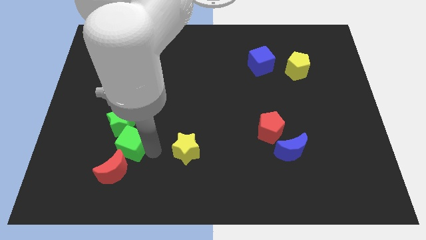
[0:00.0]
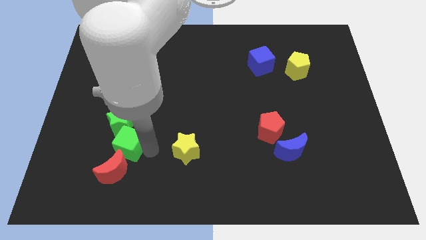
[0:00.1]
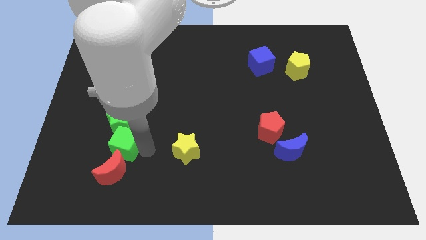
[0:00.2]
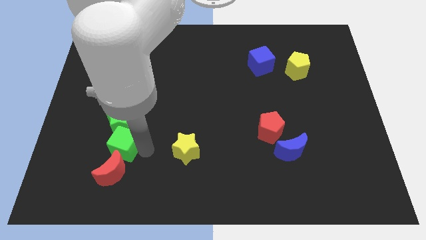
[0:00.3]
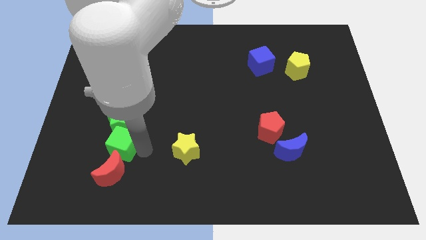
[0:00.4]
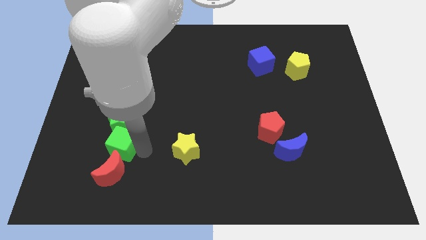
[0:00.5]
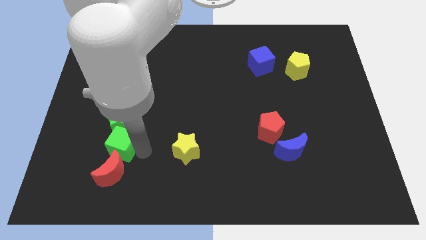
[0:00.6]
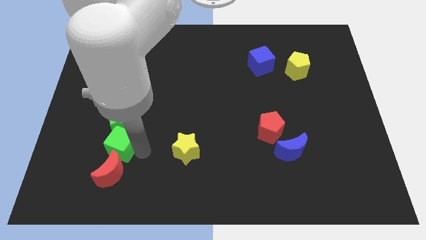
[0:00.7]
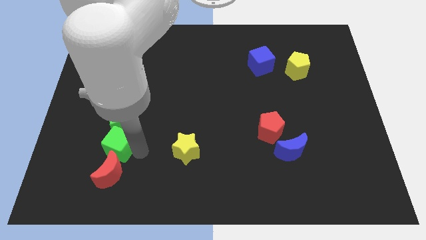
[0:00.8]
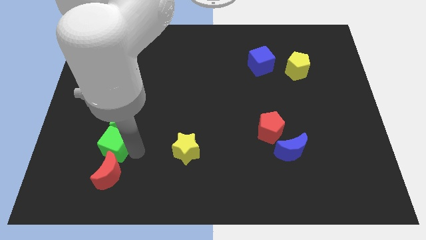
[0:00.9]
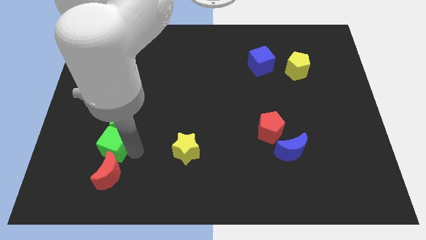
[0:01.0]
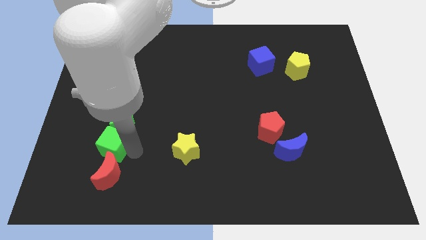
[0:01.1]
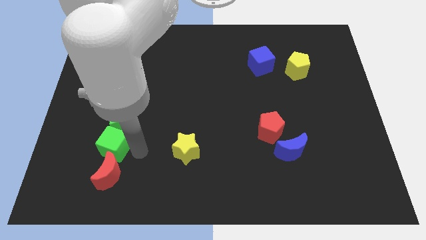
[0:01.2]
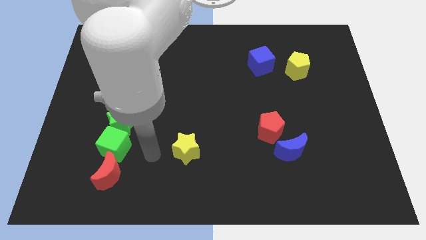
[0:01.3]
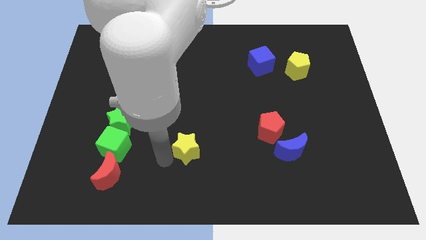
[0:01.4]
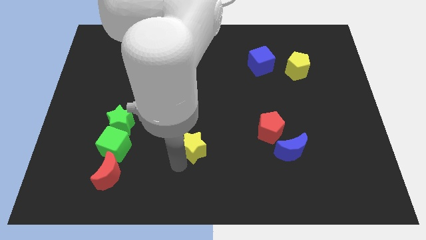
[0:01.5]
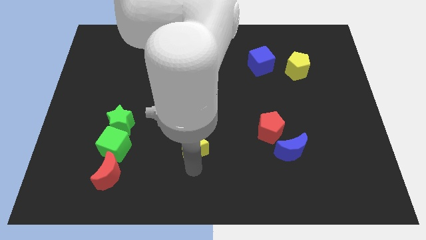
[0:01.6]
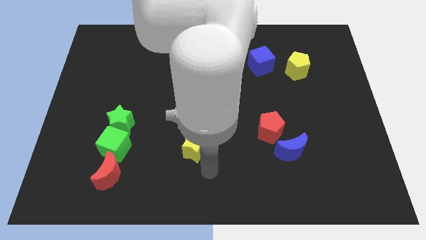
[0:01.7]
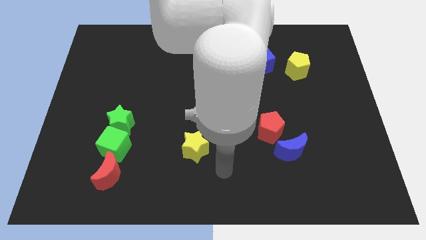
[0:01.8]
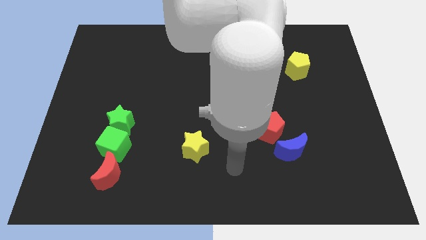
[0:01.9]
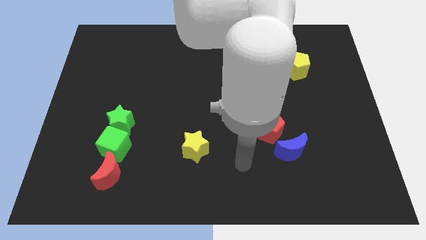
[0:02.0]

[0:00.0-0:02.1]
push the green cube into red crescent

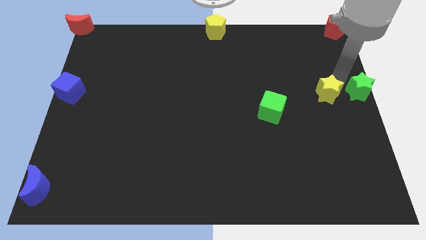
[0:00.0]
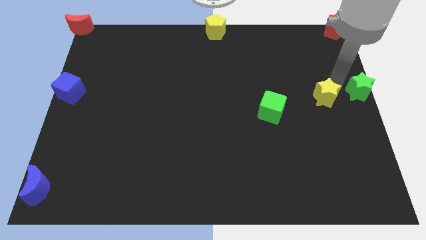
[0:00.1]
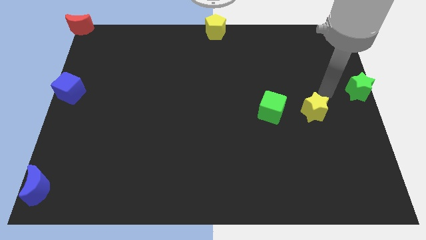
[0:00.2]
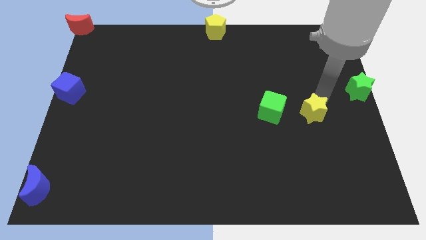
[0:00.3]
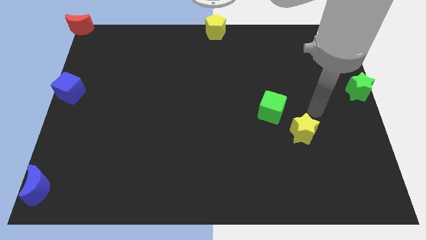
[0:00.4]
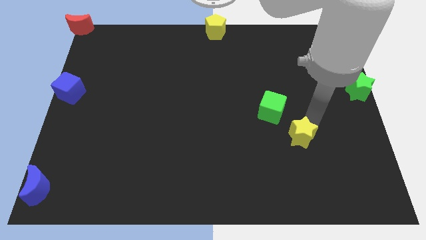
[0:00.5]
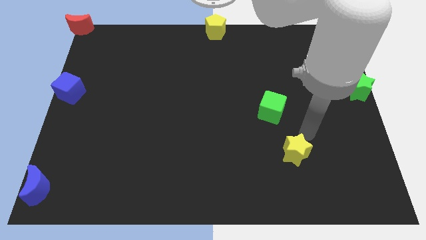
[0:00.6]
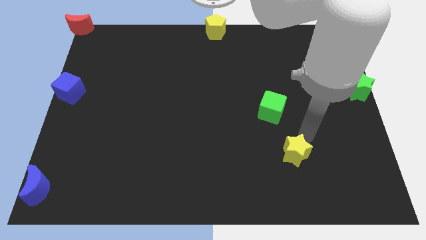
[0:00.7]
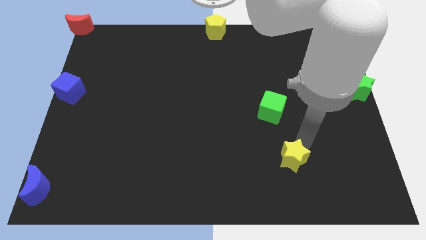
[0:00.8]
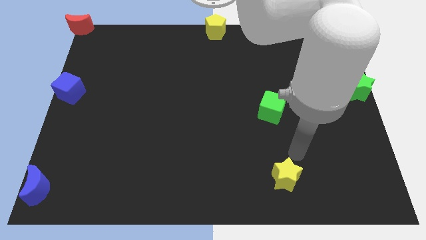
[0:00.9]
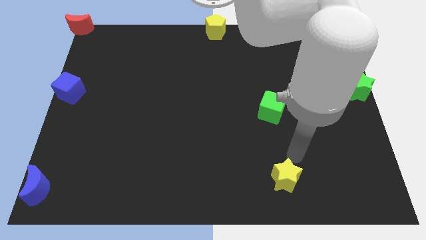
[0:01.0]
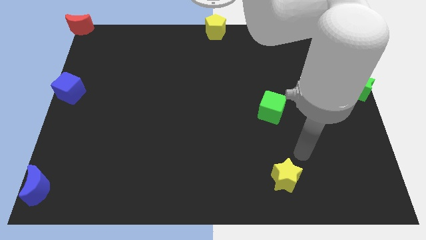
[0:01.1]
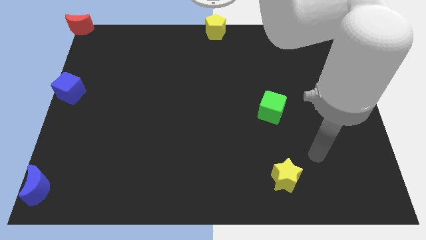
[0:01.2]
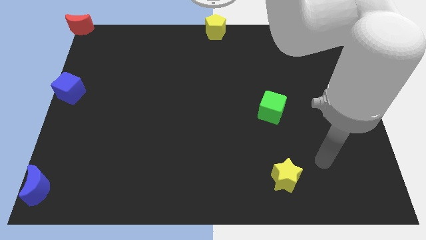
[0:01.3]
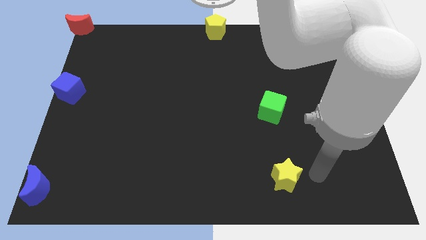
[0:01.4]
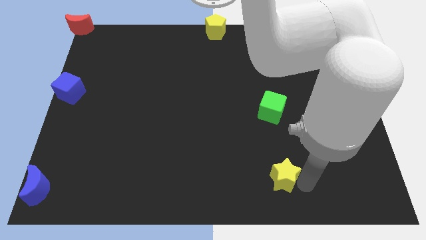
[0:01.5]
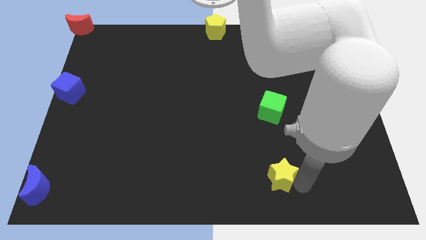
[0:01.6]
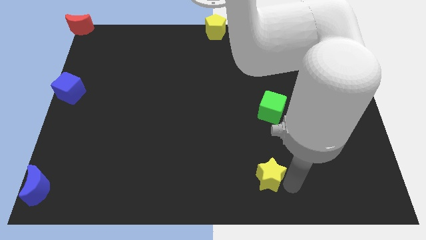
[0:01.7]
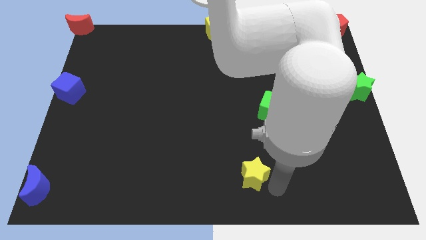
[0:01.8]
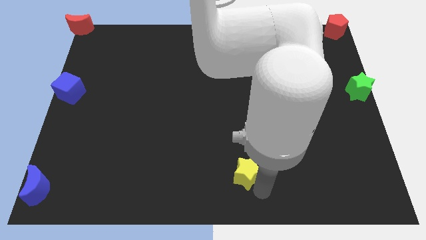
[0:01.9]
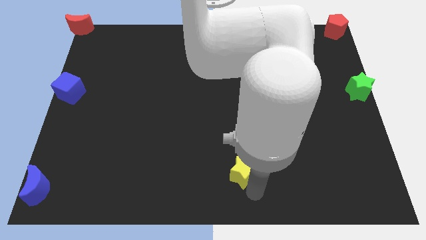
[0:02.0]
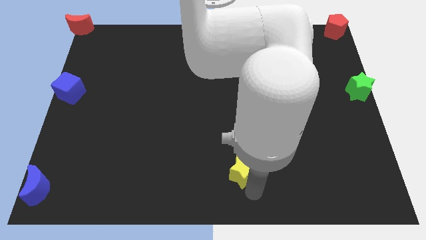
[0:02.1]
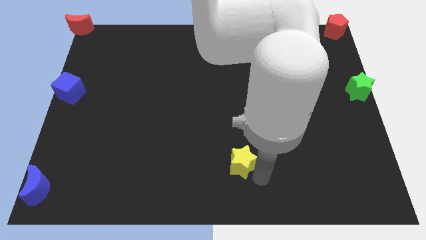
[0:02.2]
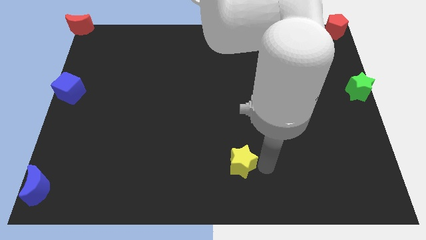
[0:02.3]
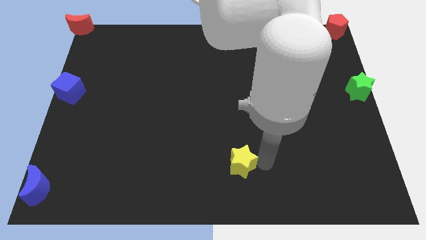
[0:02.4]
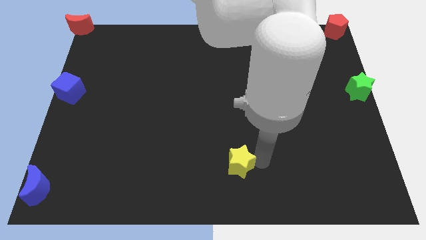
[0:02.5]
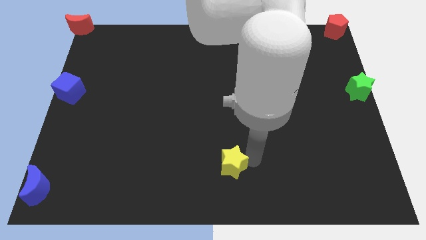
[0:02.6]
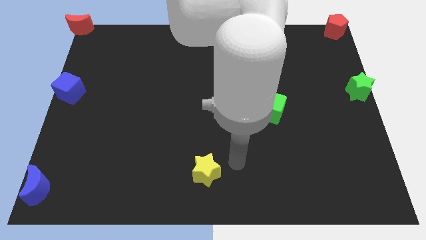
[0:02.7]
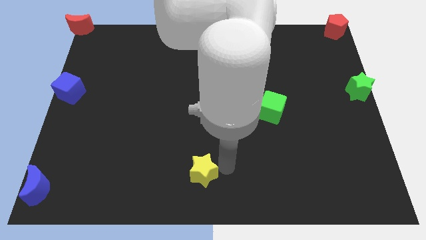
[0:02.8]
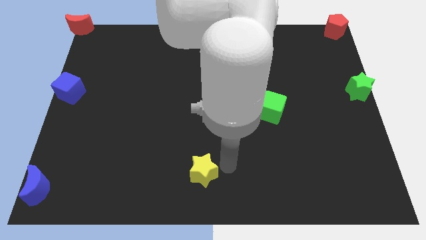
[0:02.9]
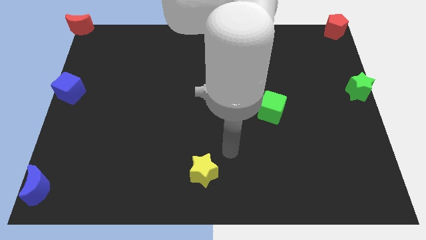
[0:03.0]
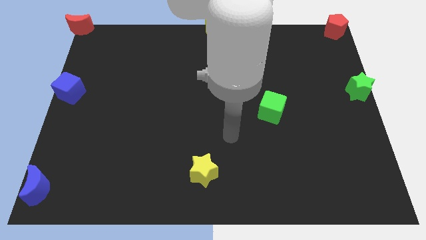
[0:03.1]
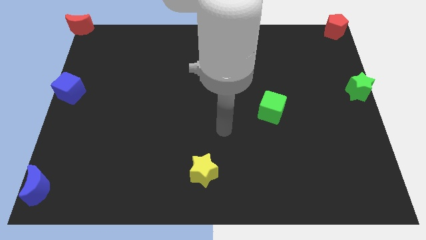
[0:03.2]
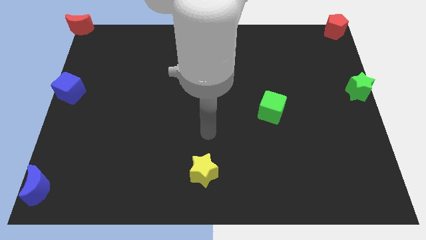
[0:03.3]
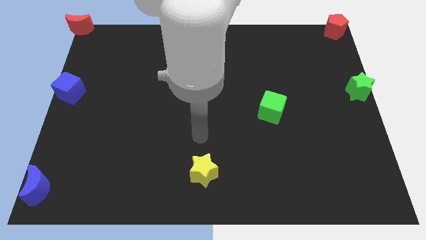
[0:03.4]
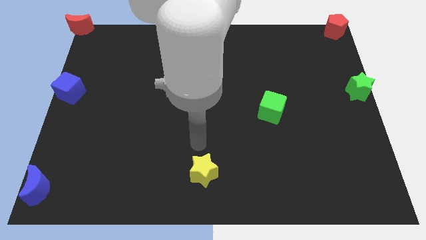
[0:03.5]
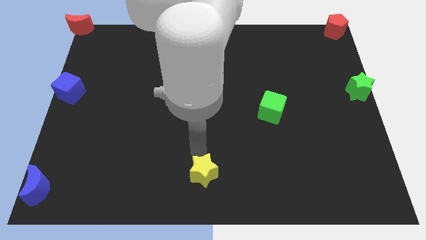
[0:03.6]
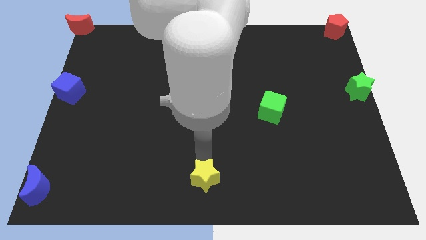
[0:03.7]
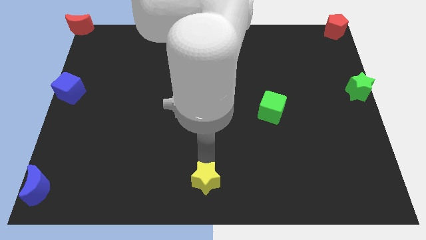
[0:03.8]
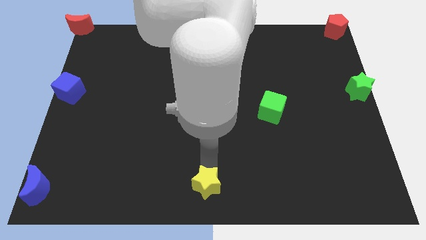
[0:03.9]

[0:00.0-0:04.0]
move yellow star towards the bottom center of the board

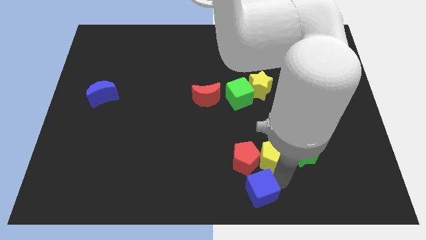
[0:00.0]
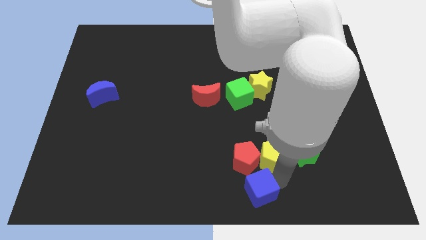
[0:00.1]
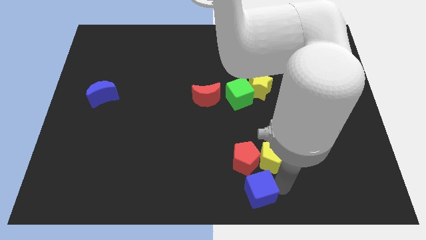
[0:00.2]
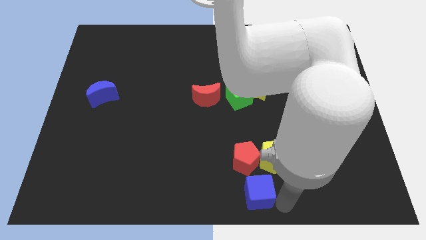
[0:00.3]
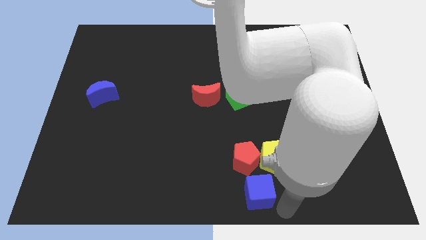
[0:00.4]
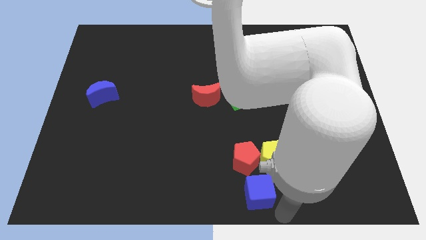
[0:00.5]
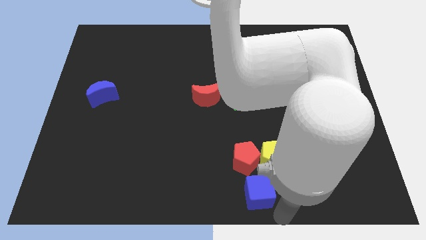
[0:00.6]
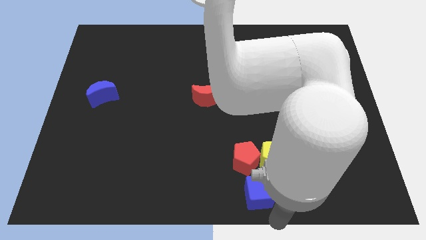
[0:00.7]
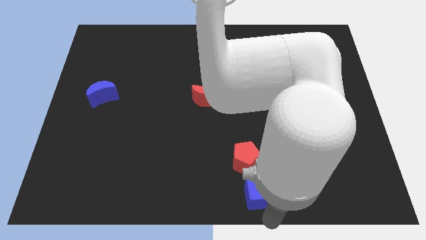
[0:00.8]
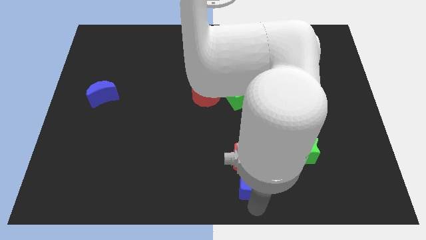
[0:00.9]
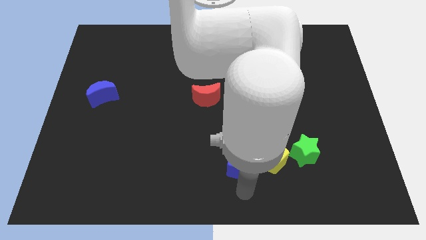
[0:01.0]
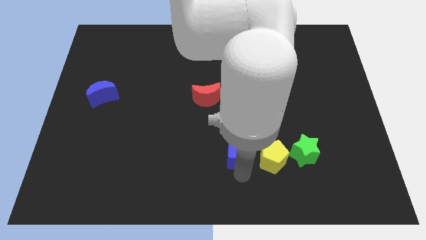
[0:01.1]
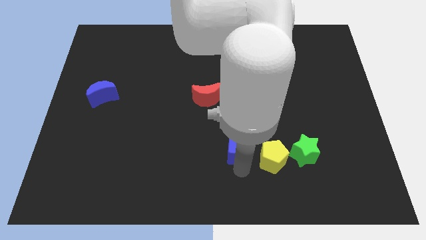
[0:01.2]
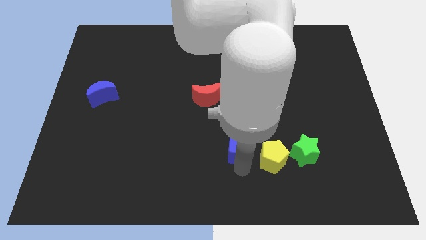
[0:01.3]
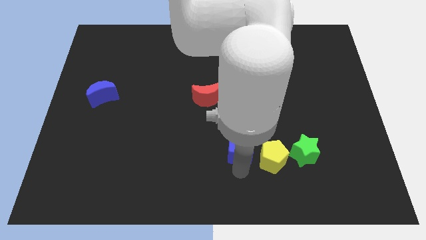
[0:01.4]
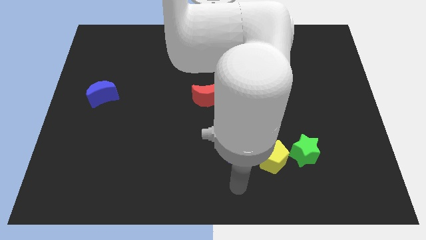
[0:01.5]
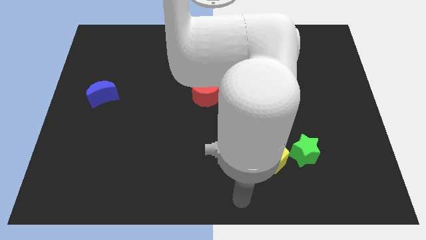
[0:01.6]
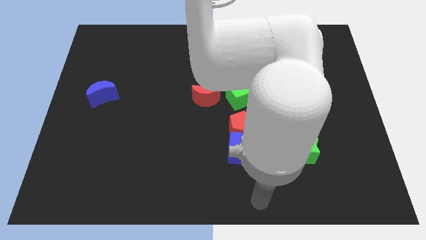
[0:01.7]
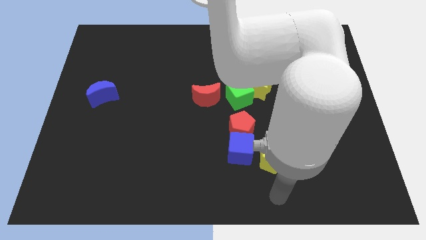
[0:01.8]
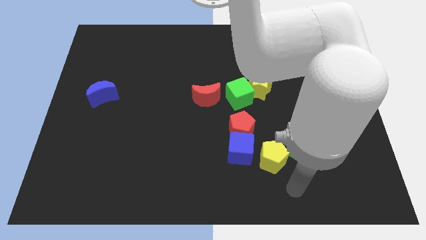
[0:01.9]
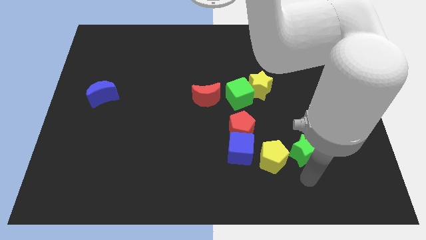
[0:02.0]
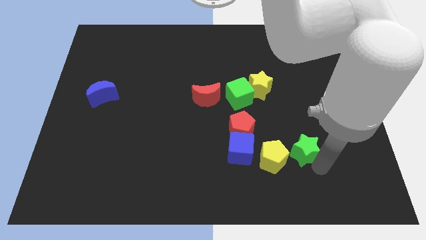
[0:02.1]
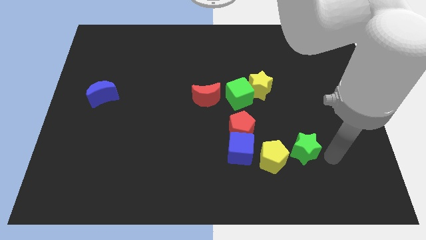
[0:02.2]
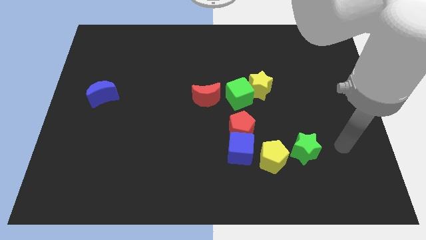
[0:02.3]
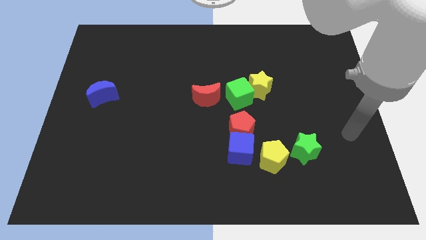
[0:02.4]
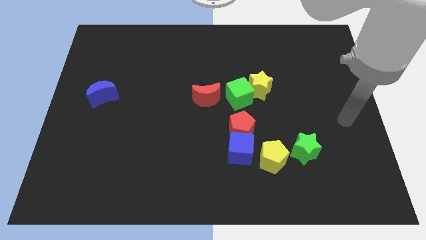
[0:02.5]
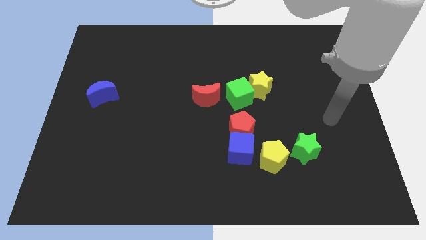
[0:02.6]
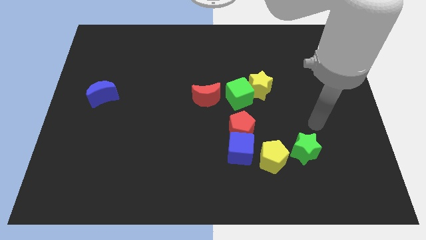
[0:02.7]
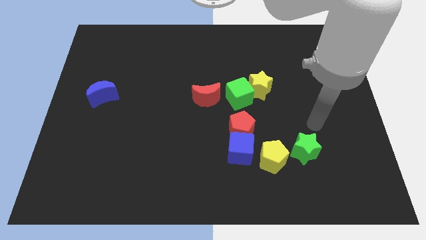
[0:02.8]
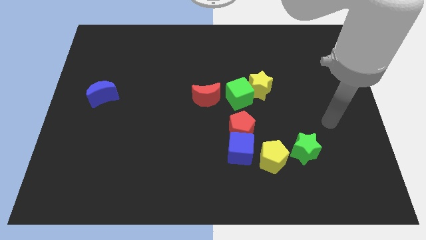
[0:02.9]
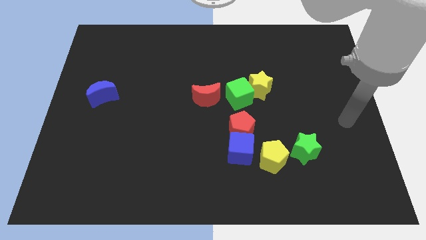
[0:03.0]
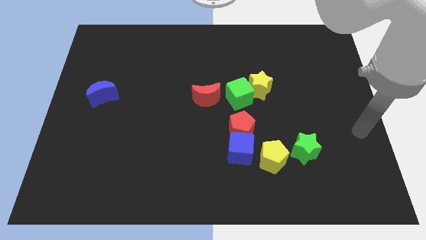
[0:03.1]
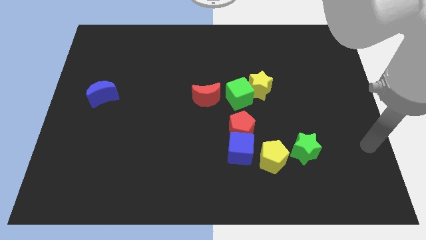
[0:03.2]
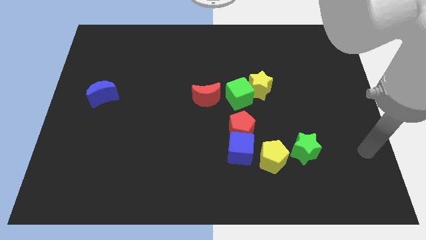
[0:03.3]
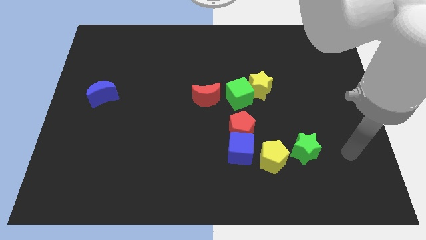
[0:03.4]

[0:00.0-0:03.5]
move the blue cube and the red pentagon towards center of the board
